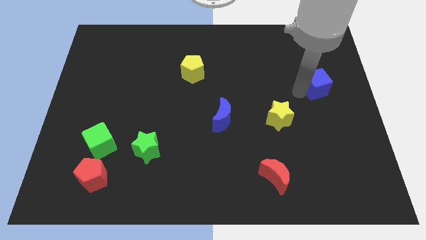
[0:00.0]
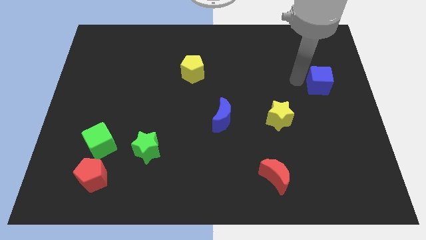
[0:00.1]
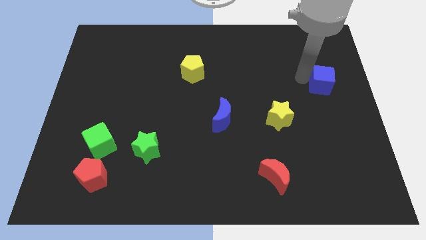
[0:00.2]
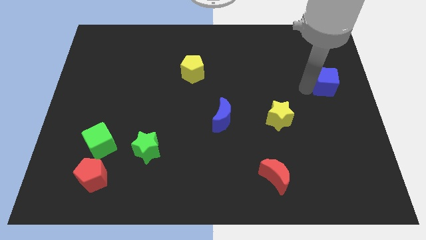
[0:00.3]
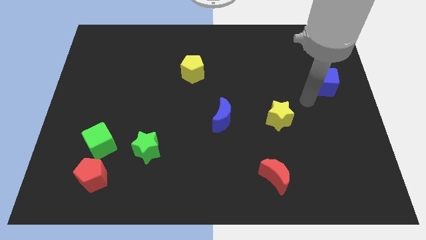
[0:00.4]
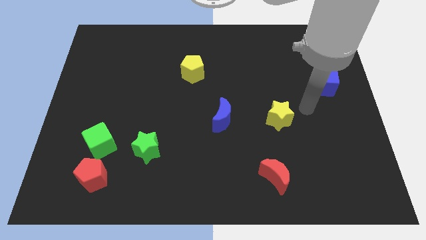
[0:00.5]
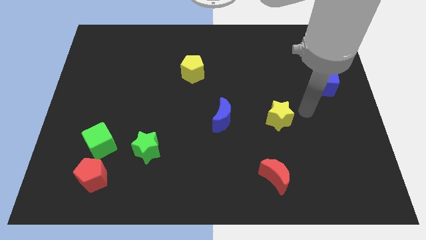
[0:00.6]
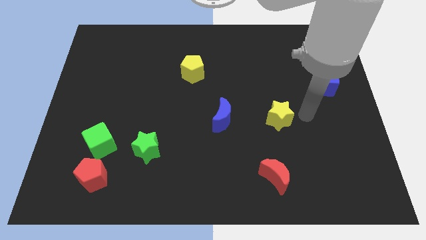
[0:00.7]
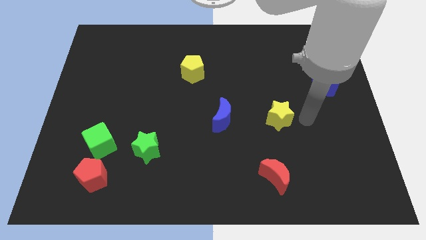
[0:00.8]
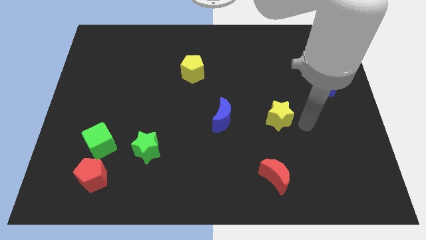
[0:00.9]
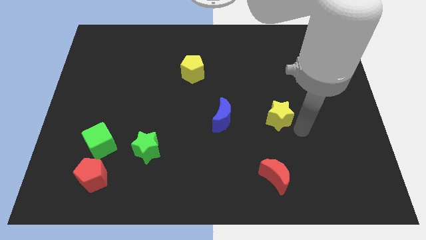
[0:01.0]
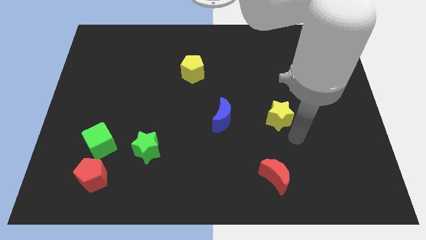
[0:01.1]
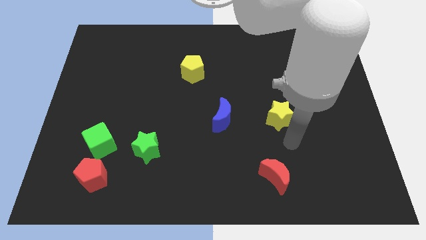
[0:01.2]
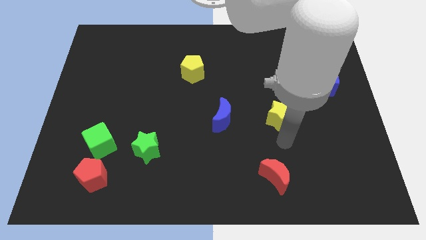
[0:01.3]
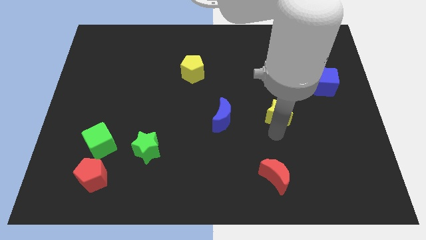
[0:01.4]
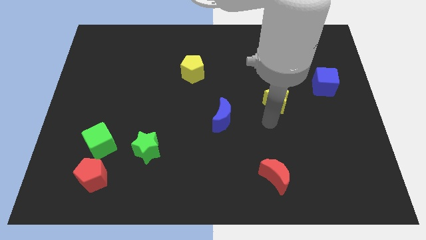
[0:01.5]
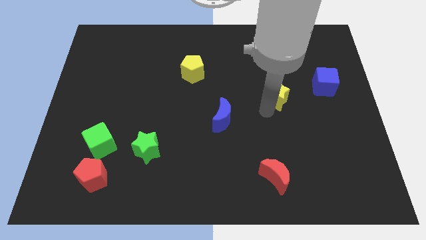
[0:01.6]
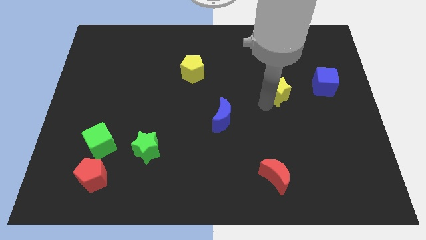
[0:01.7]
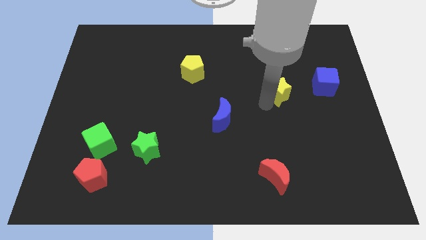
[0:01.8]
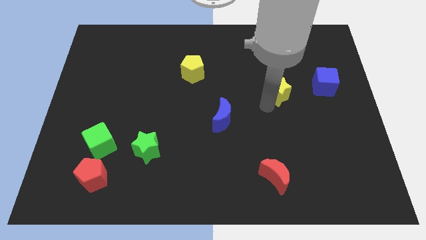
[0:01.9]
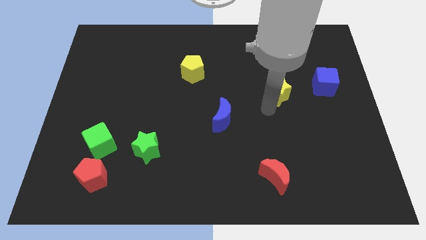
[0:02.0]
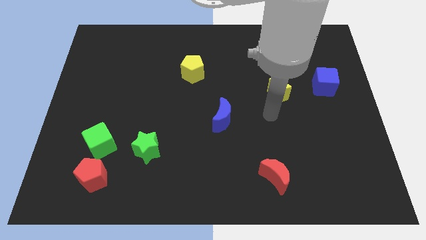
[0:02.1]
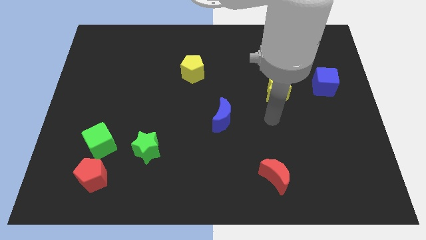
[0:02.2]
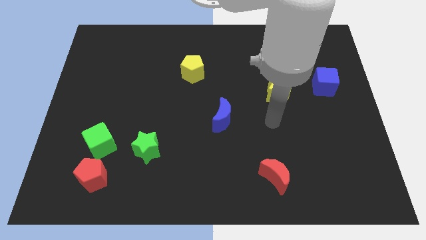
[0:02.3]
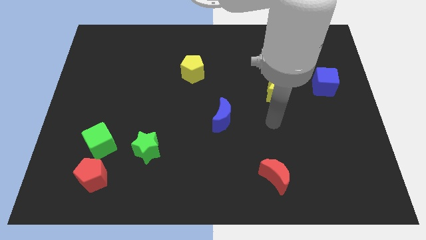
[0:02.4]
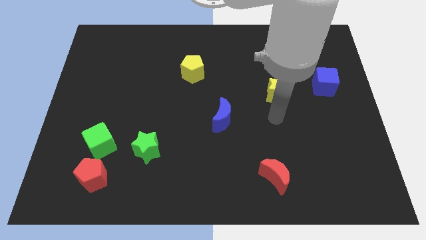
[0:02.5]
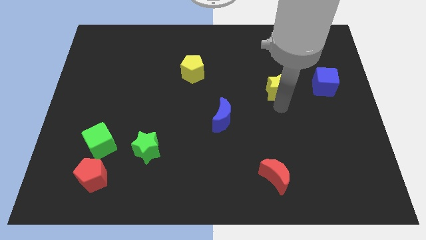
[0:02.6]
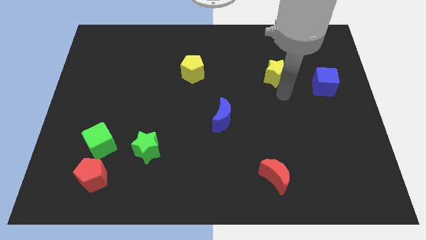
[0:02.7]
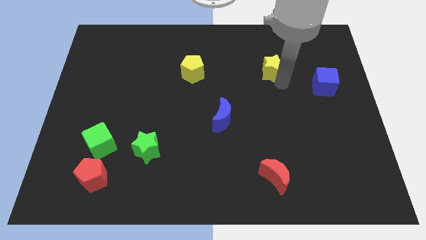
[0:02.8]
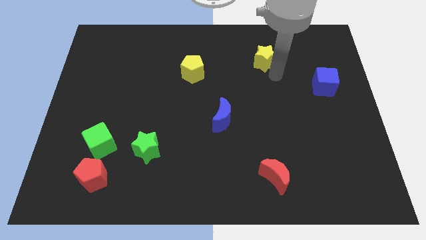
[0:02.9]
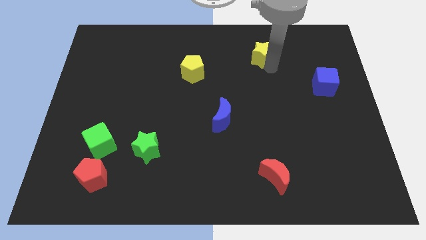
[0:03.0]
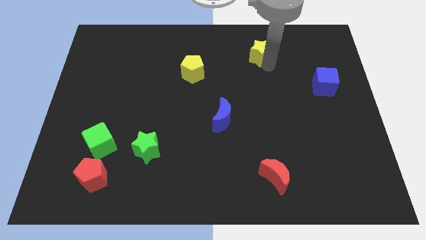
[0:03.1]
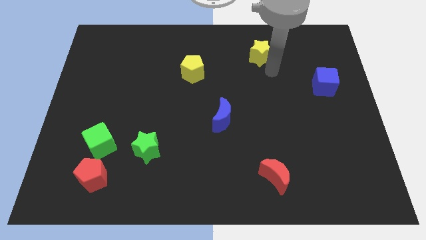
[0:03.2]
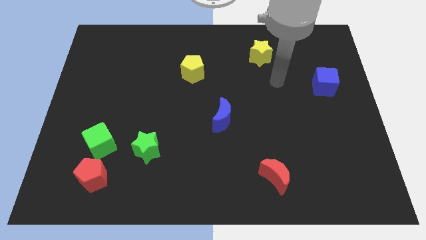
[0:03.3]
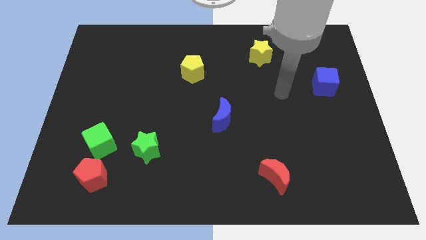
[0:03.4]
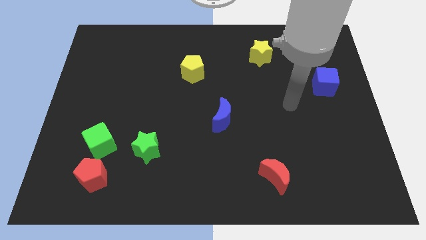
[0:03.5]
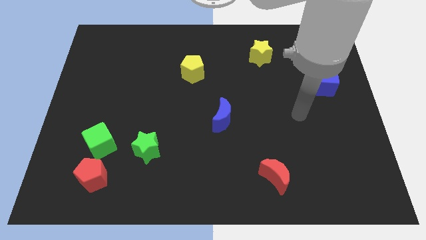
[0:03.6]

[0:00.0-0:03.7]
move the yellow star to the top of the board

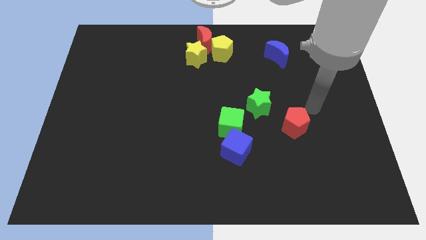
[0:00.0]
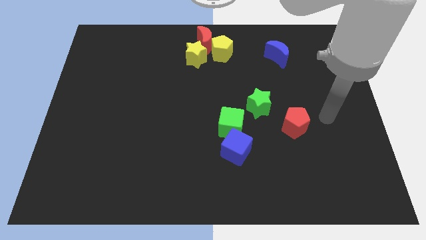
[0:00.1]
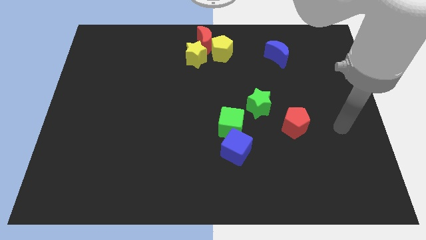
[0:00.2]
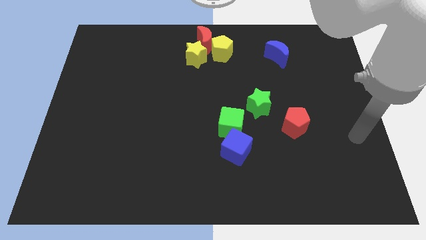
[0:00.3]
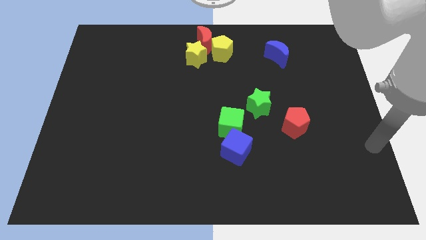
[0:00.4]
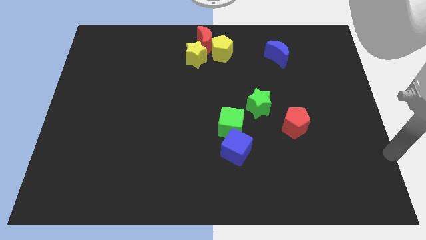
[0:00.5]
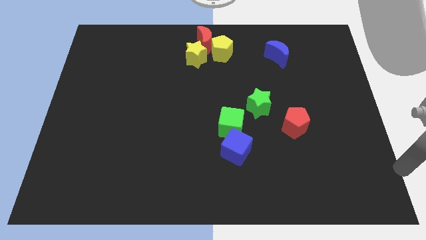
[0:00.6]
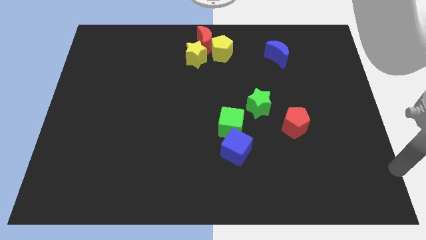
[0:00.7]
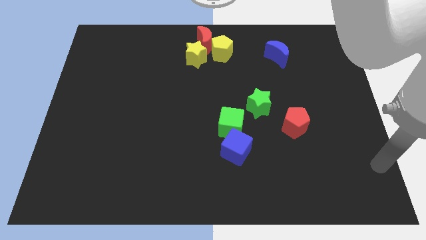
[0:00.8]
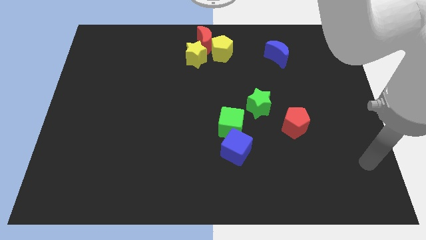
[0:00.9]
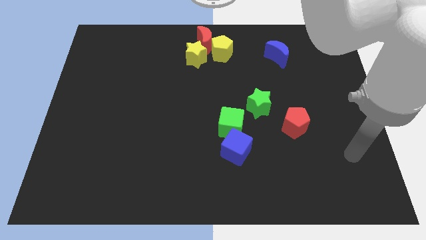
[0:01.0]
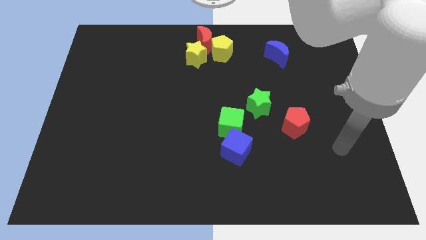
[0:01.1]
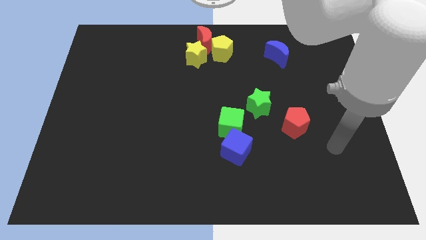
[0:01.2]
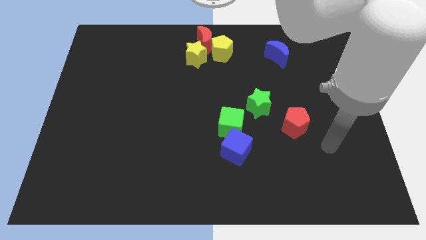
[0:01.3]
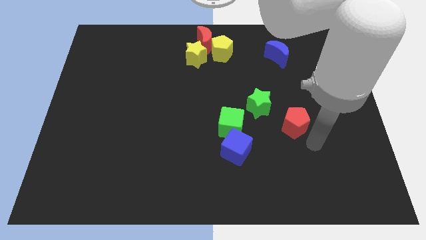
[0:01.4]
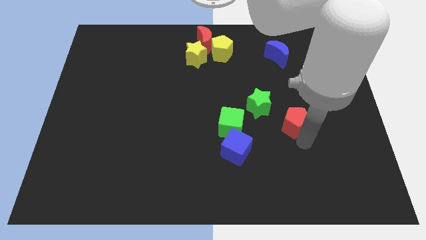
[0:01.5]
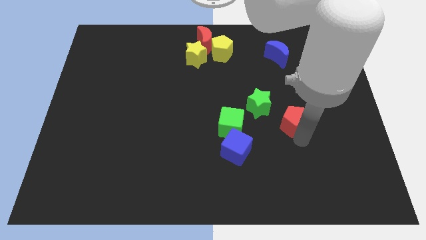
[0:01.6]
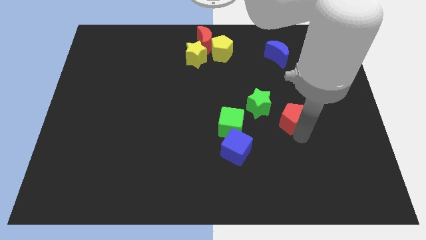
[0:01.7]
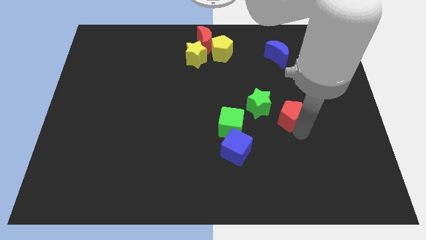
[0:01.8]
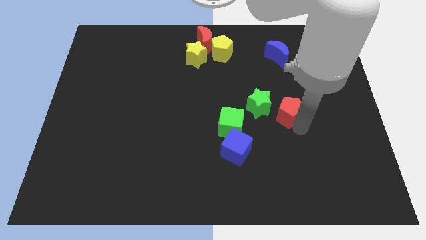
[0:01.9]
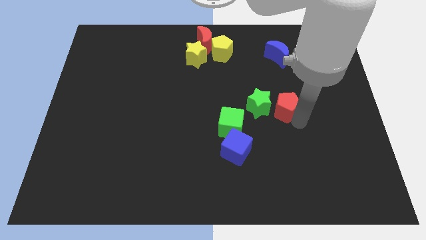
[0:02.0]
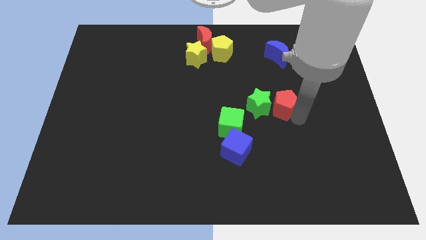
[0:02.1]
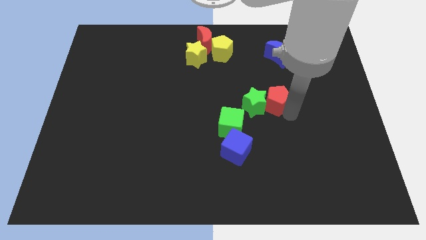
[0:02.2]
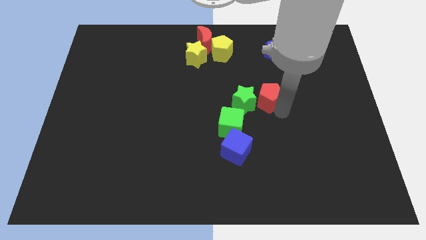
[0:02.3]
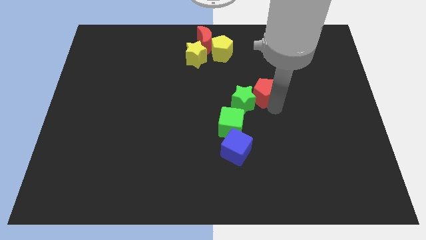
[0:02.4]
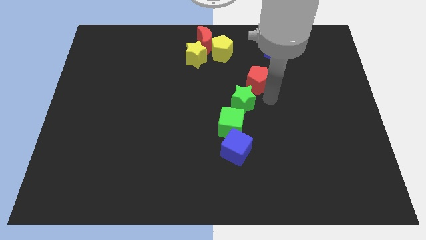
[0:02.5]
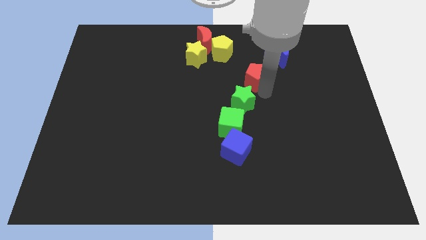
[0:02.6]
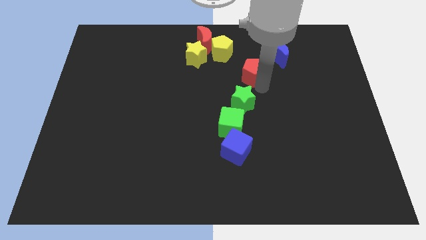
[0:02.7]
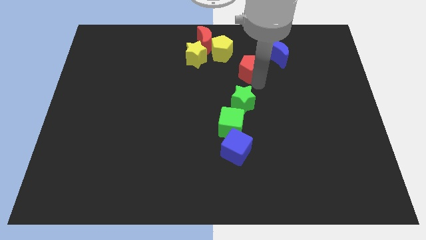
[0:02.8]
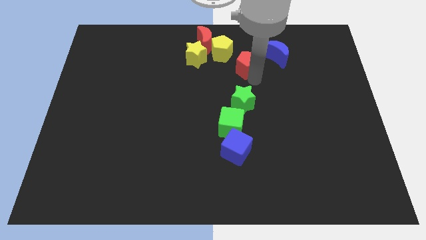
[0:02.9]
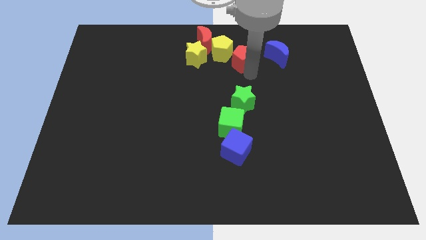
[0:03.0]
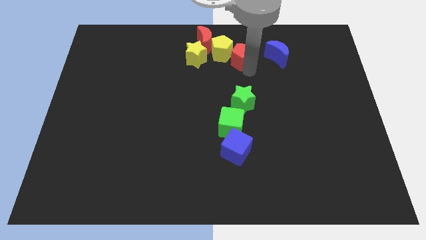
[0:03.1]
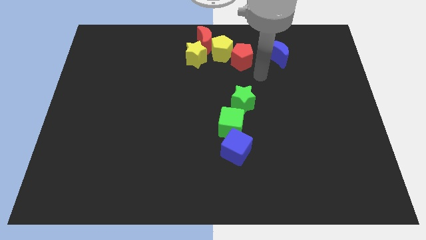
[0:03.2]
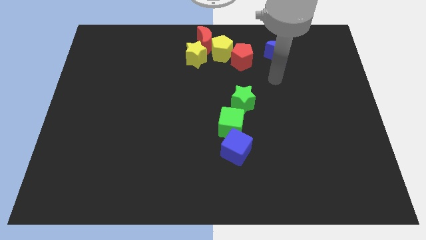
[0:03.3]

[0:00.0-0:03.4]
place the red pentagon above the green star

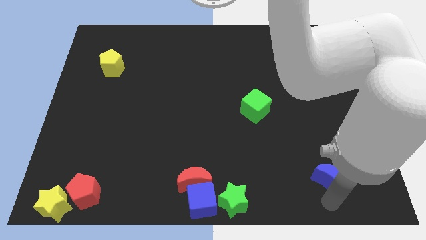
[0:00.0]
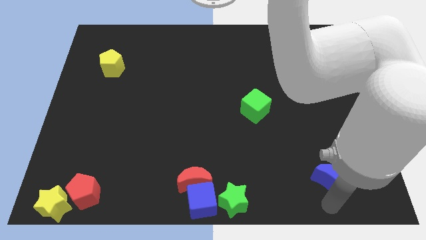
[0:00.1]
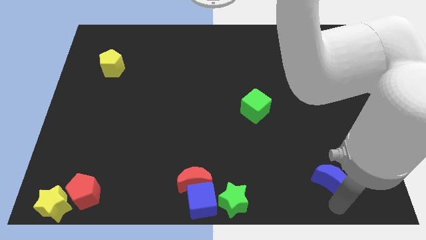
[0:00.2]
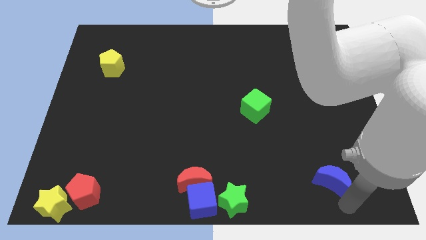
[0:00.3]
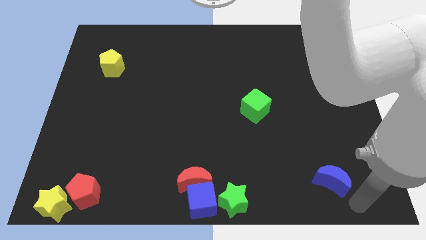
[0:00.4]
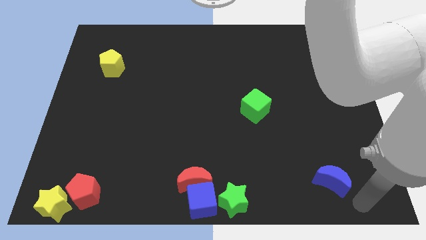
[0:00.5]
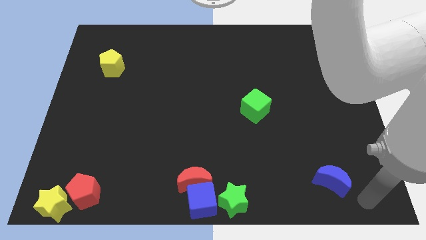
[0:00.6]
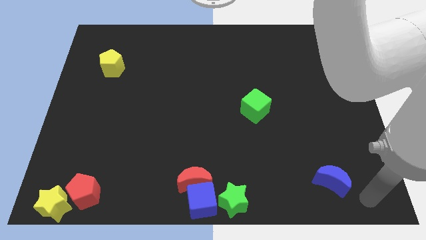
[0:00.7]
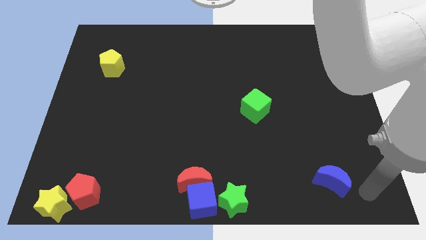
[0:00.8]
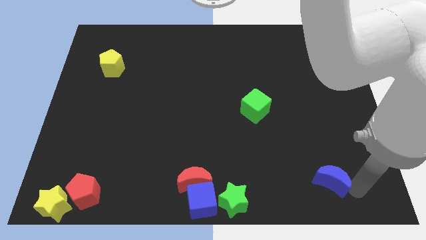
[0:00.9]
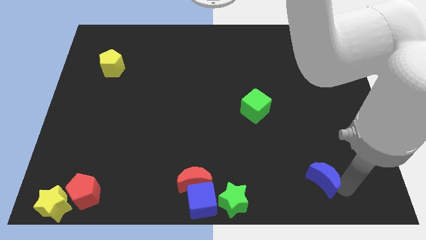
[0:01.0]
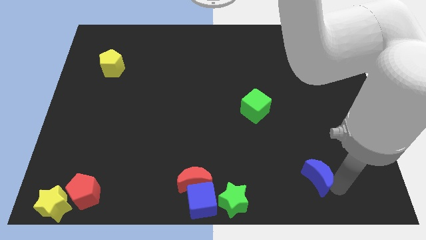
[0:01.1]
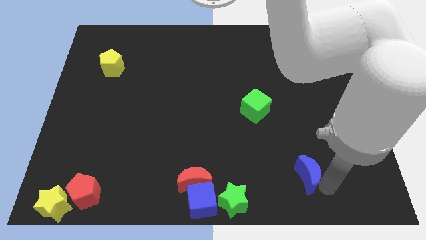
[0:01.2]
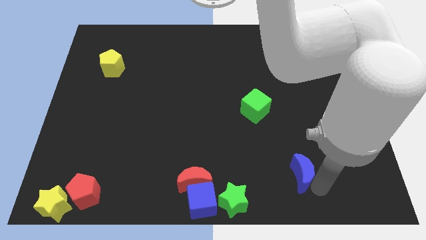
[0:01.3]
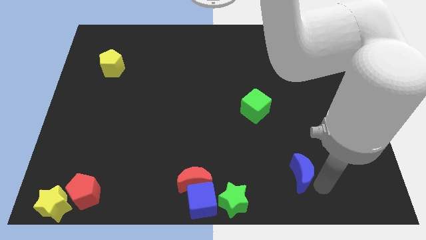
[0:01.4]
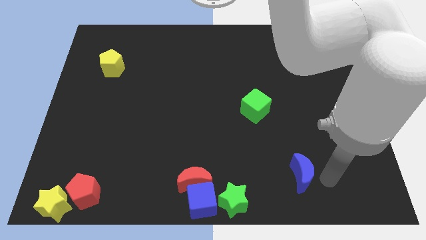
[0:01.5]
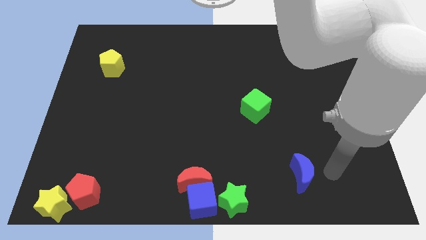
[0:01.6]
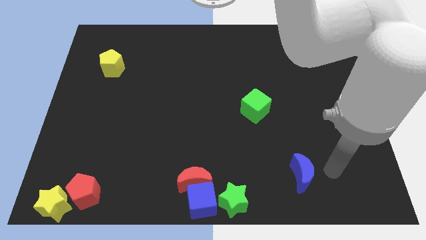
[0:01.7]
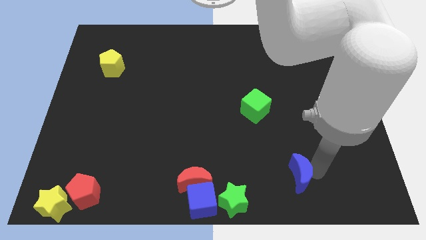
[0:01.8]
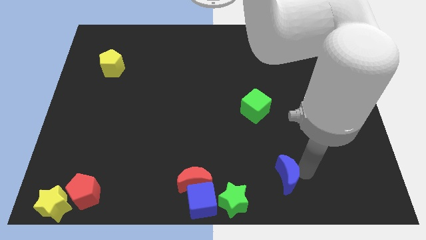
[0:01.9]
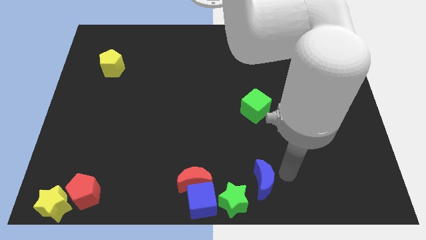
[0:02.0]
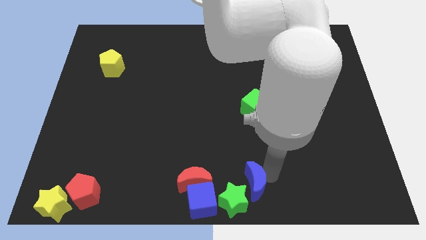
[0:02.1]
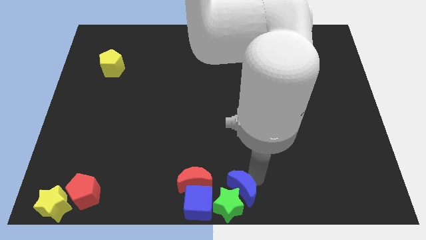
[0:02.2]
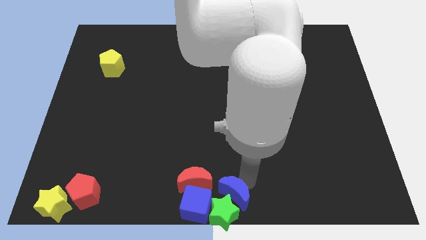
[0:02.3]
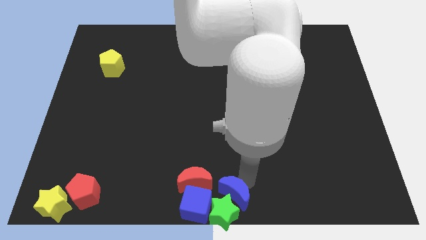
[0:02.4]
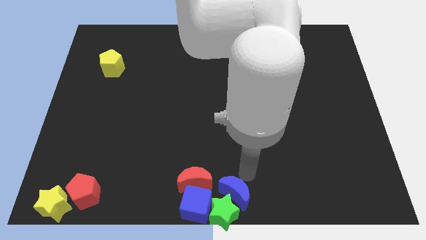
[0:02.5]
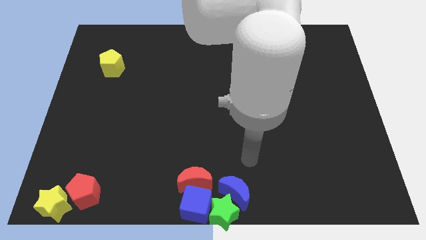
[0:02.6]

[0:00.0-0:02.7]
move the blue crescent to the top right of the green star
